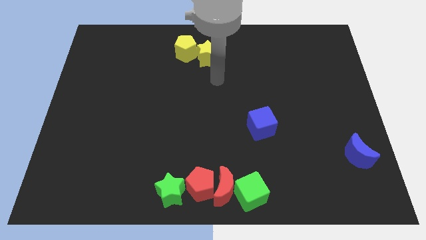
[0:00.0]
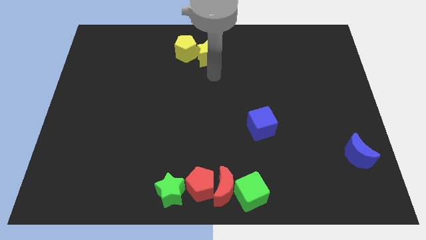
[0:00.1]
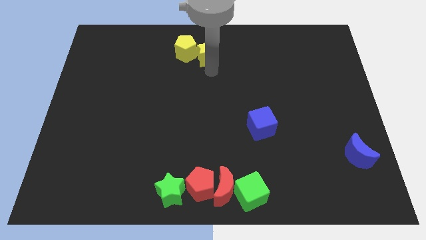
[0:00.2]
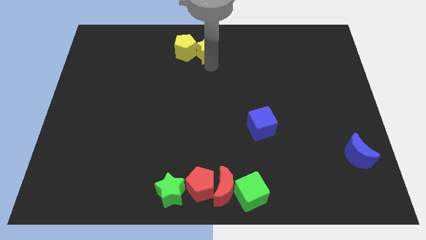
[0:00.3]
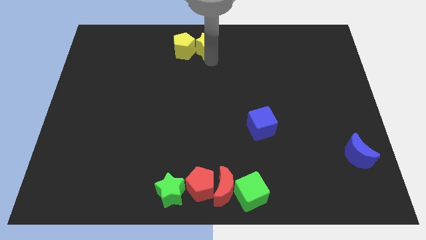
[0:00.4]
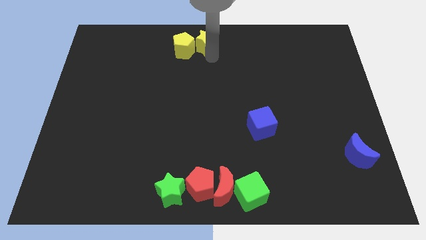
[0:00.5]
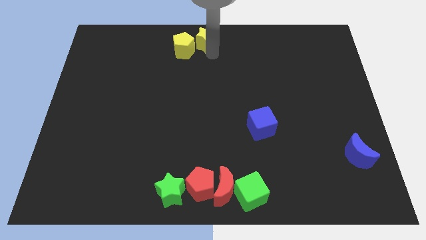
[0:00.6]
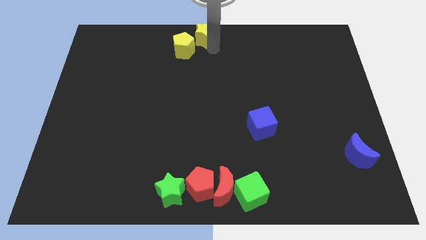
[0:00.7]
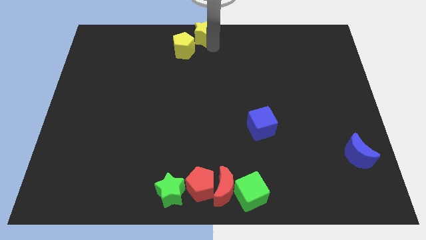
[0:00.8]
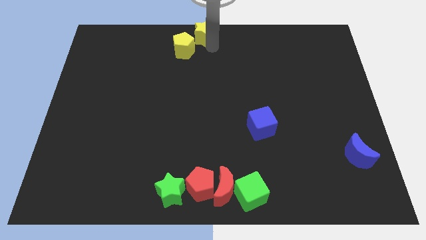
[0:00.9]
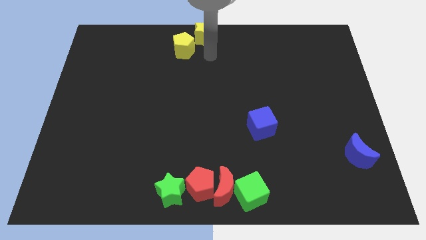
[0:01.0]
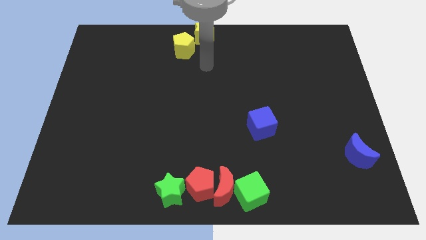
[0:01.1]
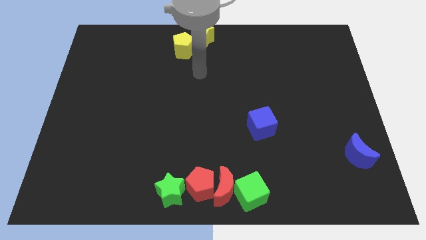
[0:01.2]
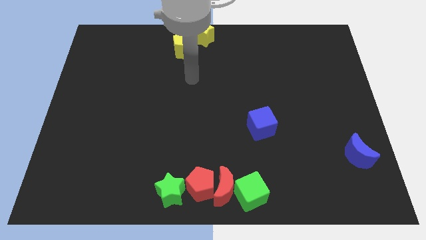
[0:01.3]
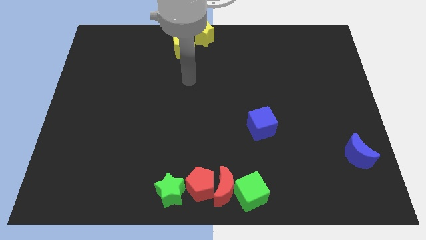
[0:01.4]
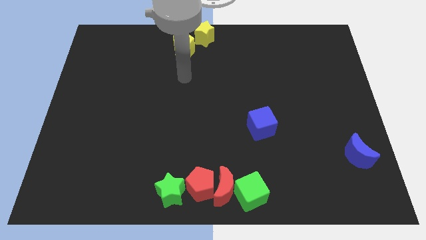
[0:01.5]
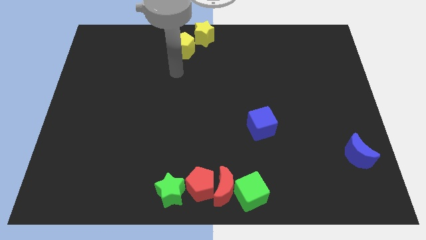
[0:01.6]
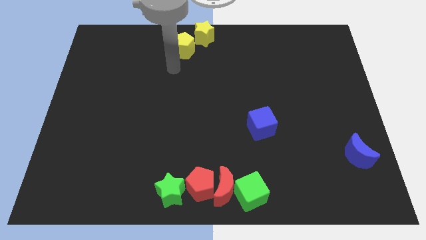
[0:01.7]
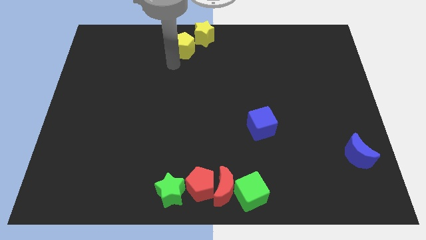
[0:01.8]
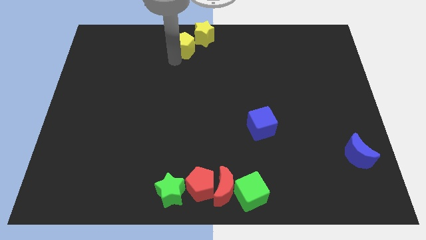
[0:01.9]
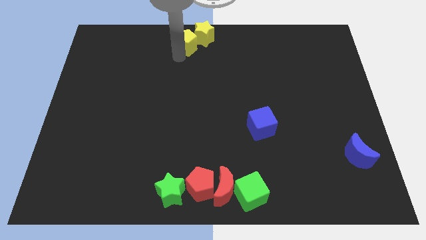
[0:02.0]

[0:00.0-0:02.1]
push the yellow star to the top center of the board

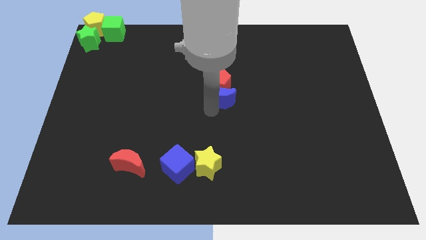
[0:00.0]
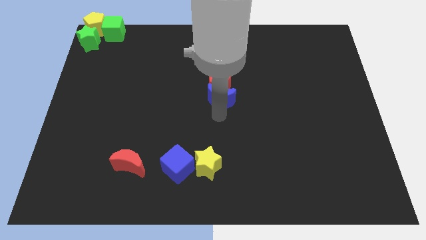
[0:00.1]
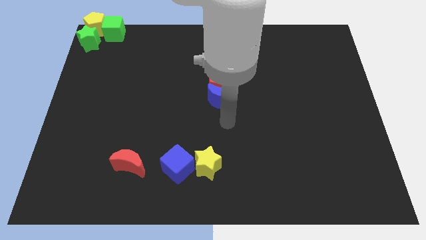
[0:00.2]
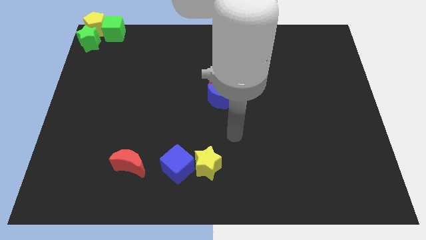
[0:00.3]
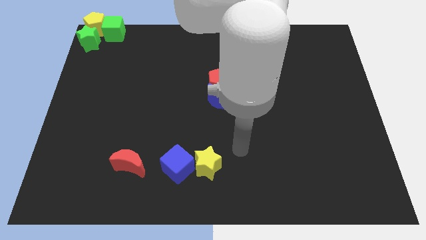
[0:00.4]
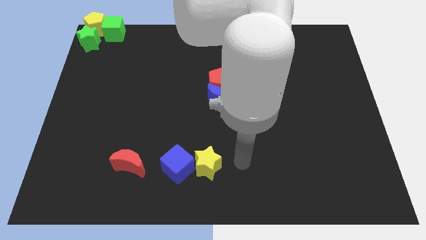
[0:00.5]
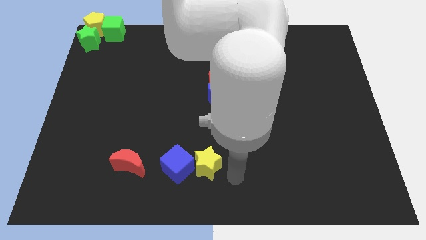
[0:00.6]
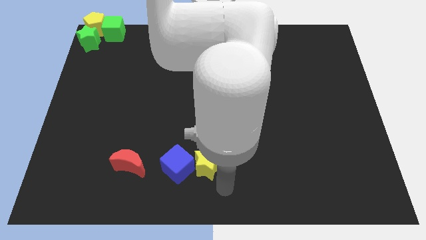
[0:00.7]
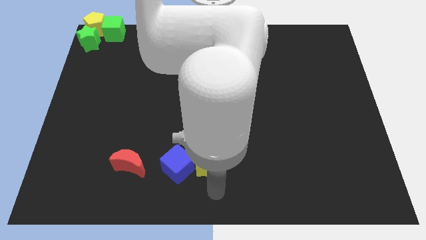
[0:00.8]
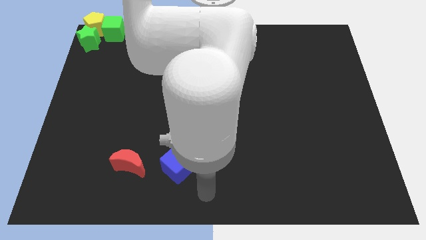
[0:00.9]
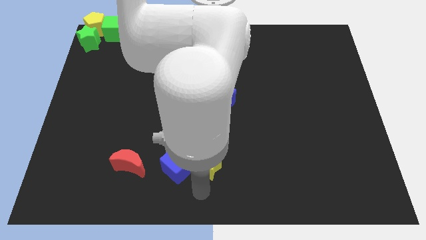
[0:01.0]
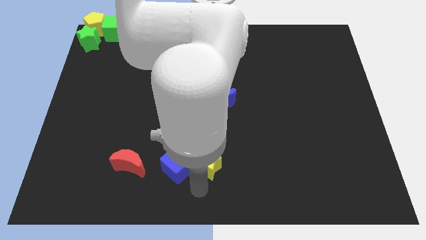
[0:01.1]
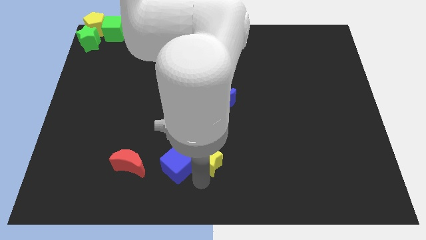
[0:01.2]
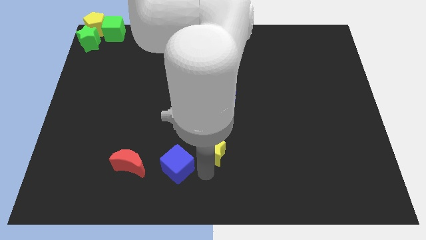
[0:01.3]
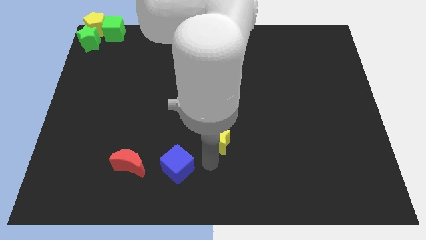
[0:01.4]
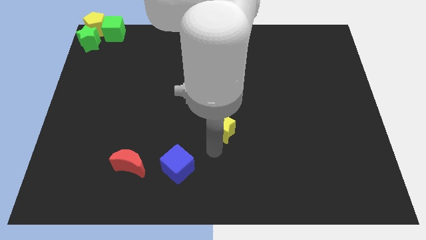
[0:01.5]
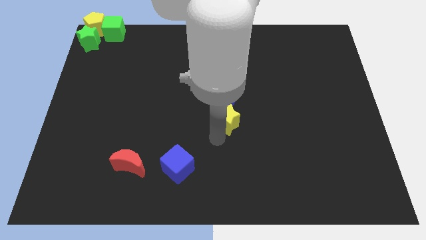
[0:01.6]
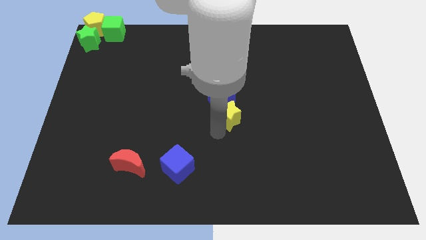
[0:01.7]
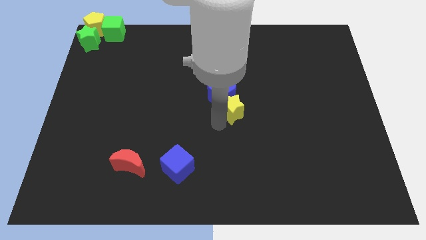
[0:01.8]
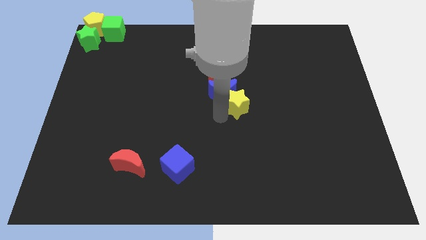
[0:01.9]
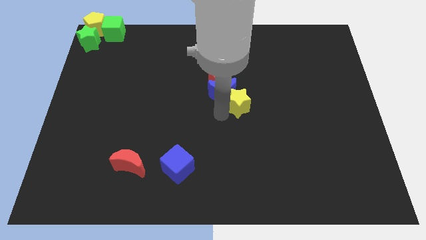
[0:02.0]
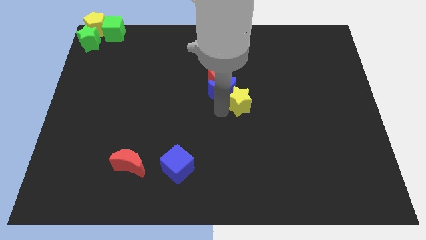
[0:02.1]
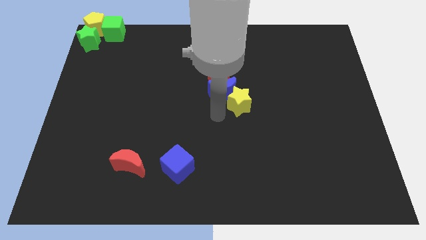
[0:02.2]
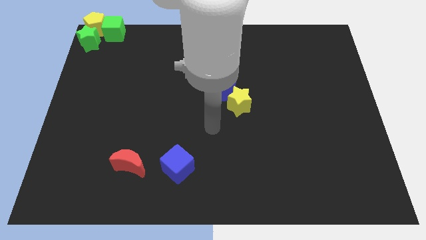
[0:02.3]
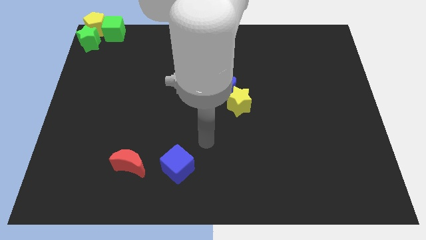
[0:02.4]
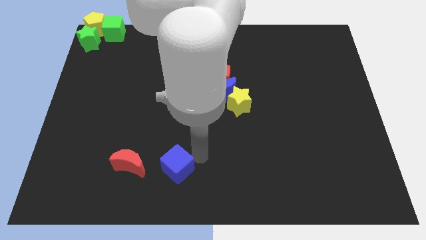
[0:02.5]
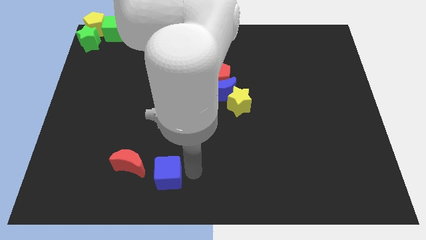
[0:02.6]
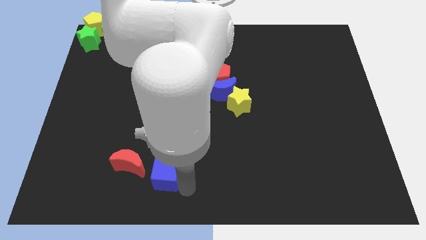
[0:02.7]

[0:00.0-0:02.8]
place the yellow star diagonally bottom right to blue moon

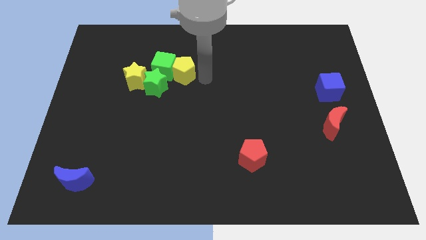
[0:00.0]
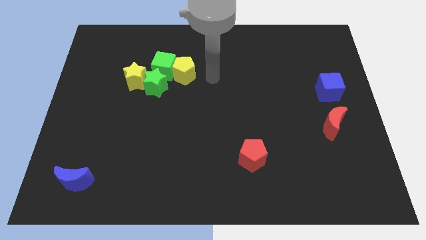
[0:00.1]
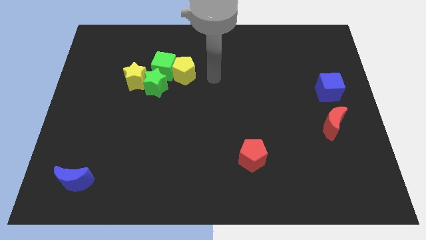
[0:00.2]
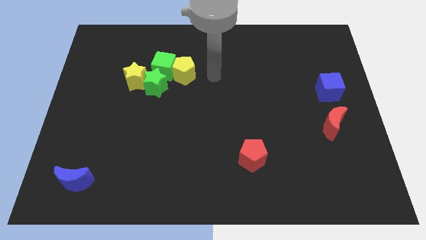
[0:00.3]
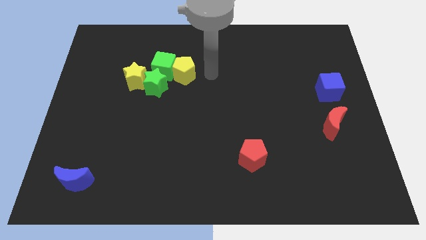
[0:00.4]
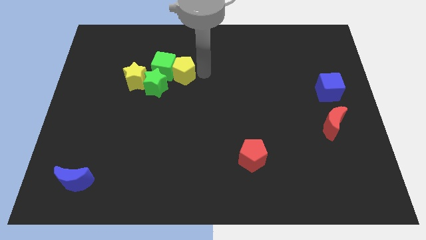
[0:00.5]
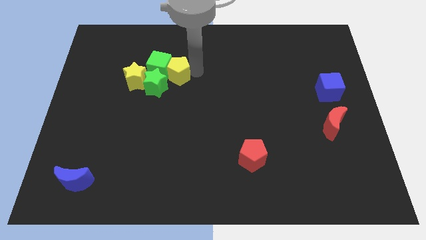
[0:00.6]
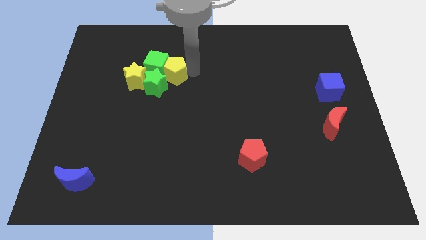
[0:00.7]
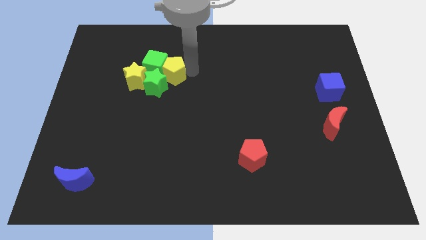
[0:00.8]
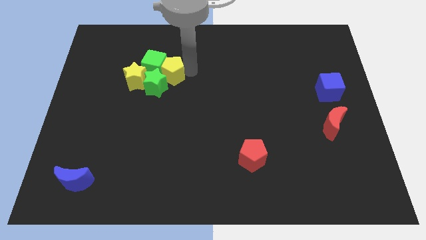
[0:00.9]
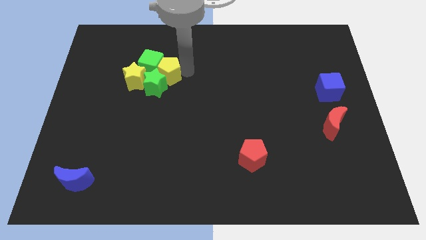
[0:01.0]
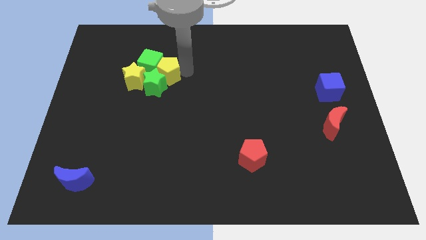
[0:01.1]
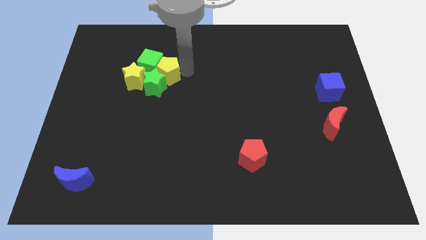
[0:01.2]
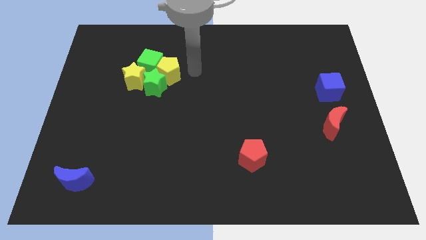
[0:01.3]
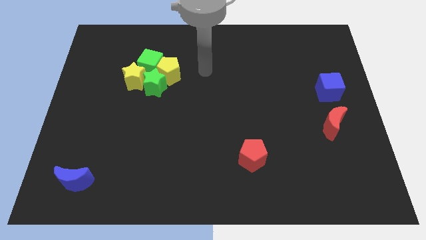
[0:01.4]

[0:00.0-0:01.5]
place the green cube and yellow pentagon above the yellow star and green star

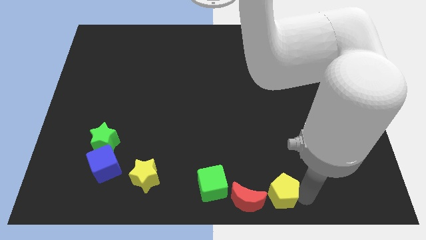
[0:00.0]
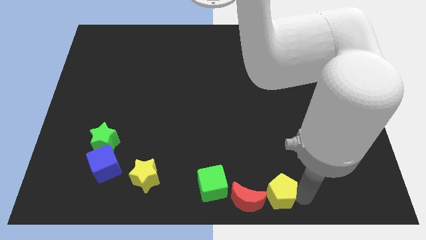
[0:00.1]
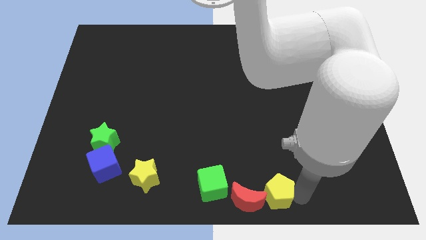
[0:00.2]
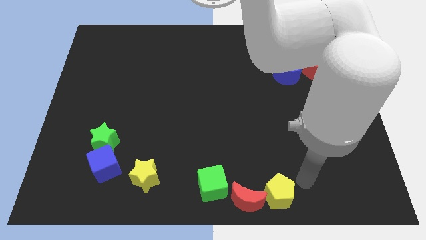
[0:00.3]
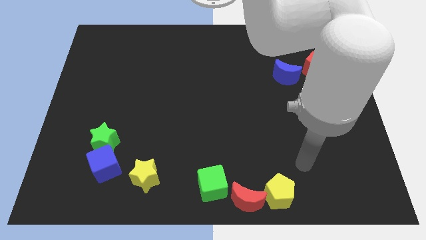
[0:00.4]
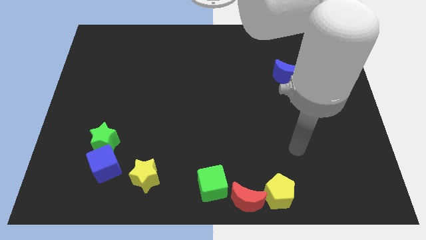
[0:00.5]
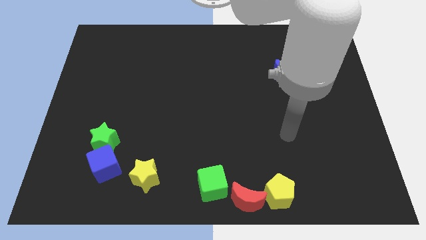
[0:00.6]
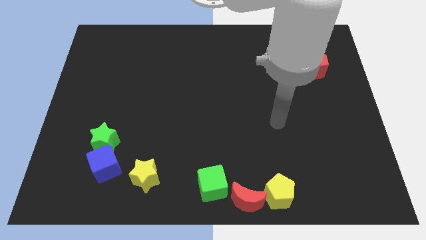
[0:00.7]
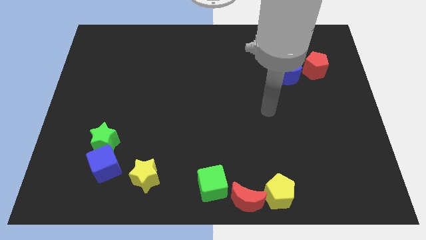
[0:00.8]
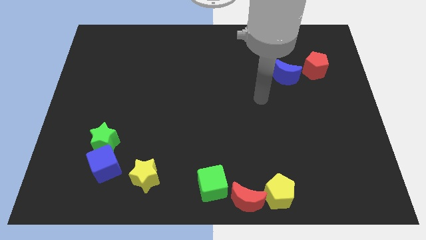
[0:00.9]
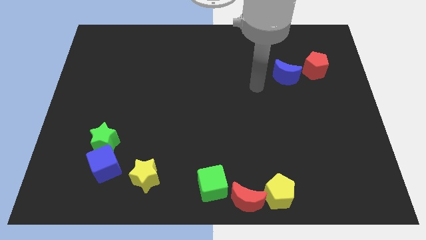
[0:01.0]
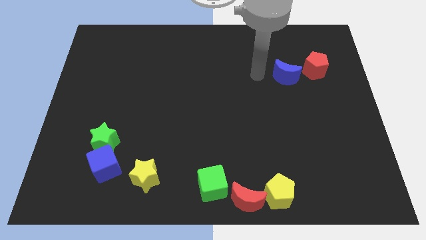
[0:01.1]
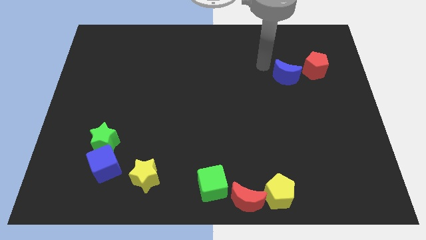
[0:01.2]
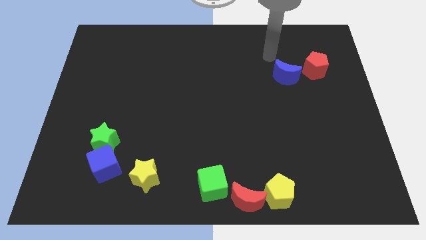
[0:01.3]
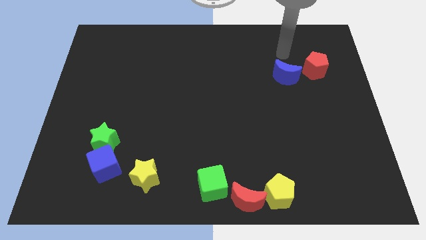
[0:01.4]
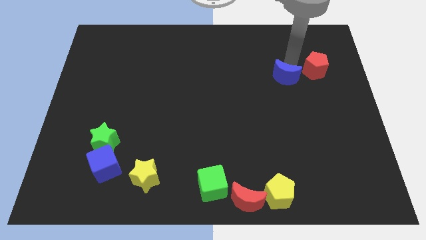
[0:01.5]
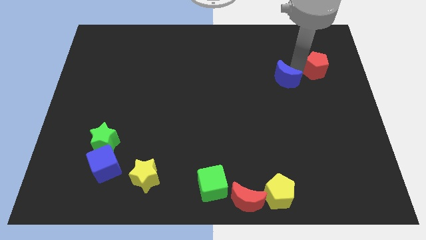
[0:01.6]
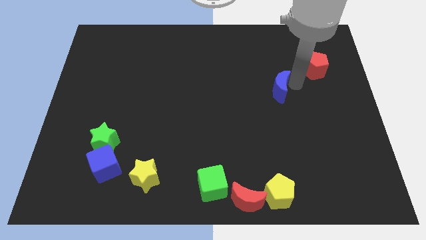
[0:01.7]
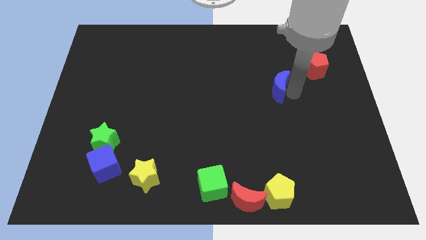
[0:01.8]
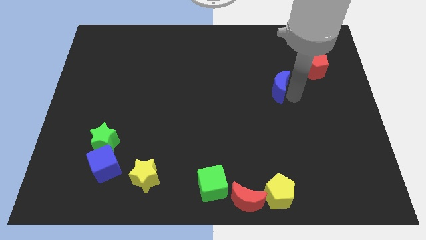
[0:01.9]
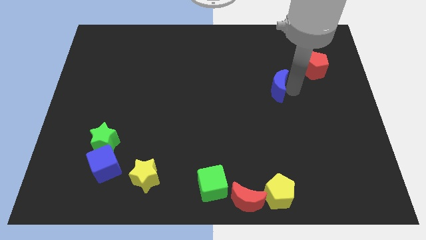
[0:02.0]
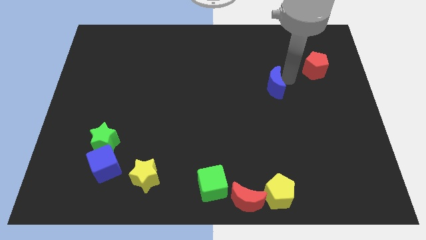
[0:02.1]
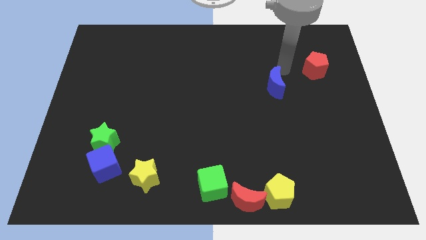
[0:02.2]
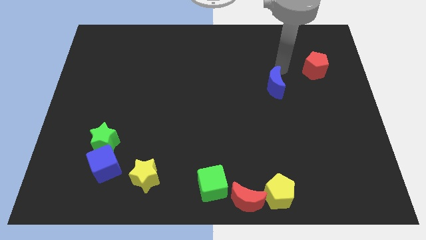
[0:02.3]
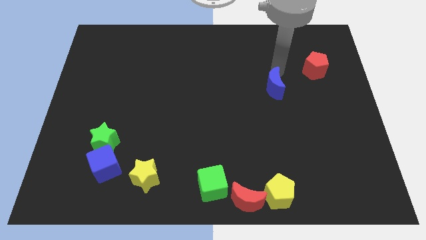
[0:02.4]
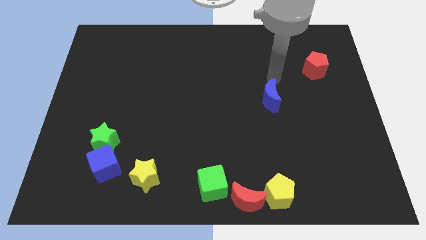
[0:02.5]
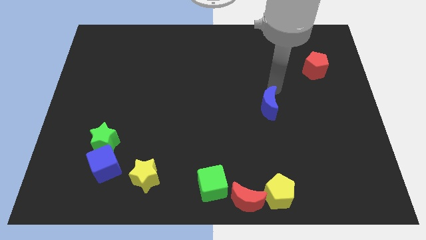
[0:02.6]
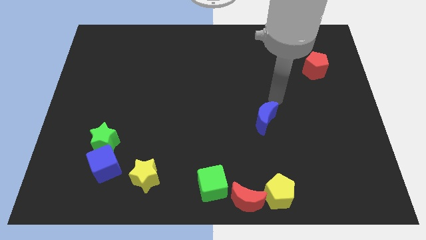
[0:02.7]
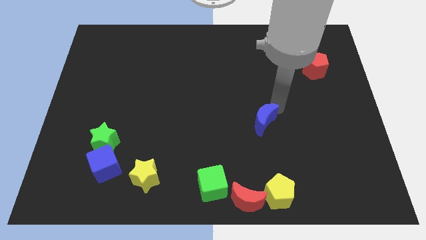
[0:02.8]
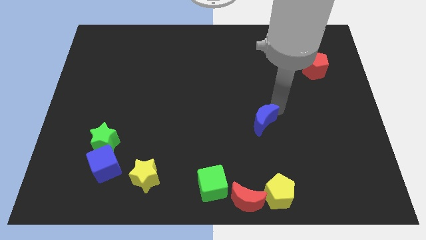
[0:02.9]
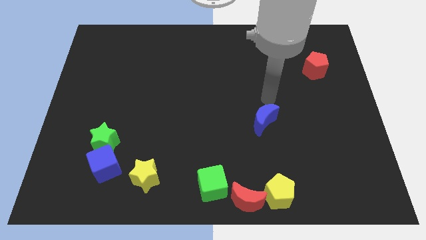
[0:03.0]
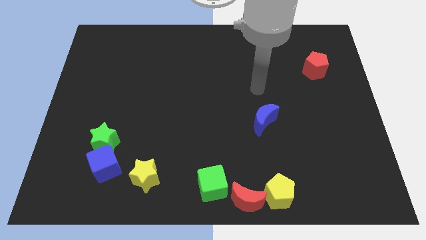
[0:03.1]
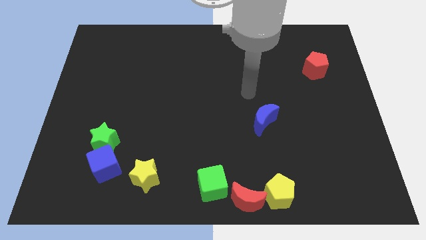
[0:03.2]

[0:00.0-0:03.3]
slide the blue crescent vertically above the yellow pentagon
